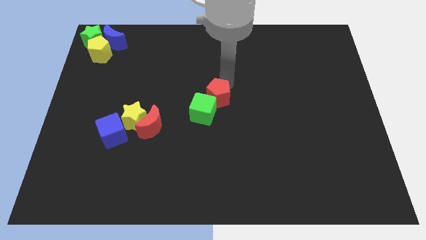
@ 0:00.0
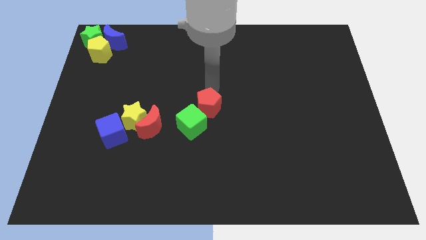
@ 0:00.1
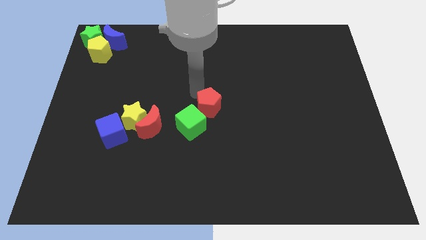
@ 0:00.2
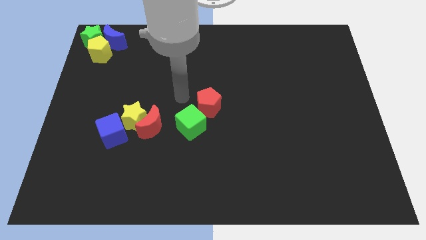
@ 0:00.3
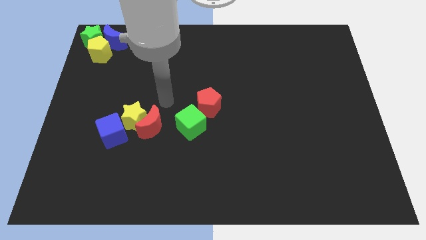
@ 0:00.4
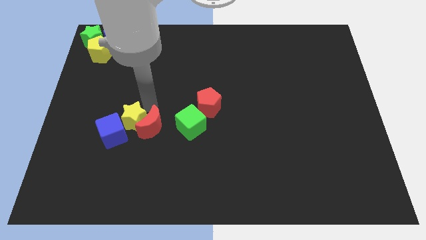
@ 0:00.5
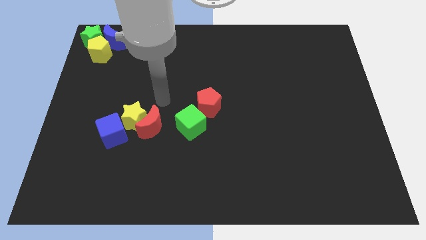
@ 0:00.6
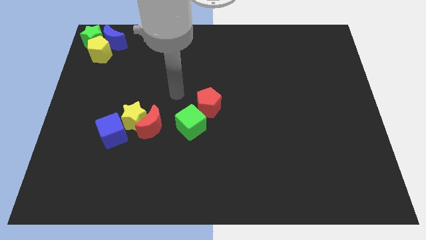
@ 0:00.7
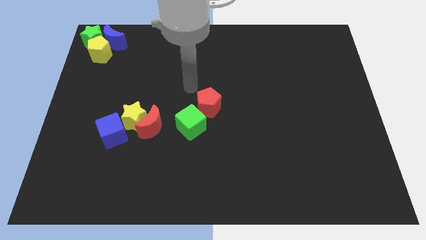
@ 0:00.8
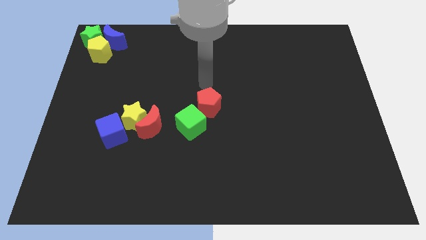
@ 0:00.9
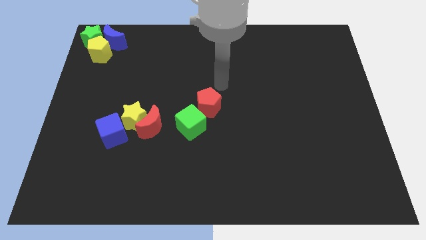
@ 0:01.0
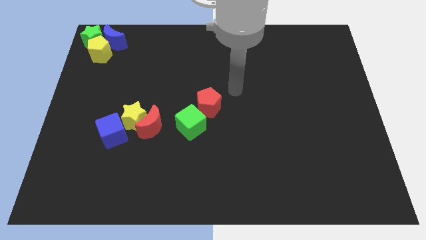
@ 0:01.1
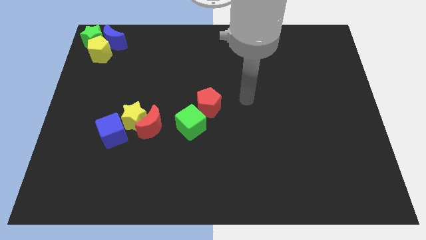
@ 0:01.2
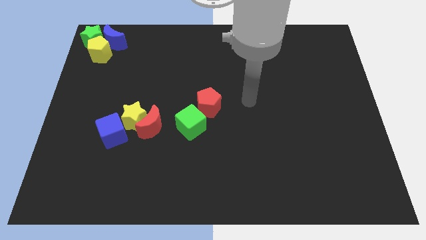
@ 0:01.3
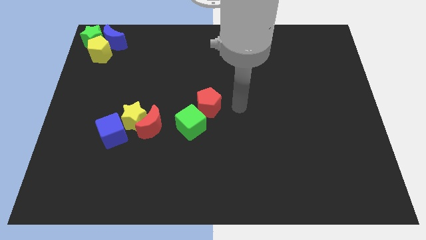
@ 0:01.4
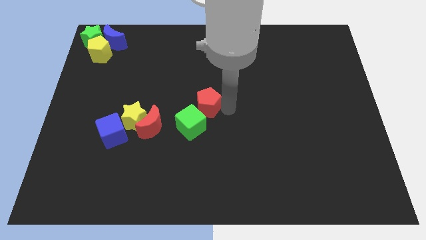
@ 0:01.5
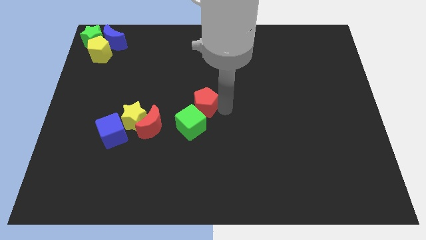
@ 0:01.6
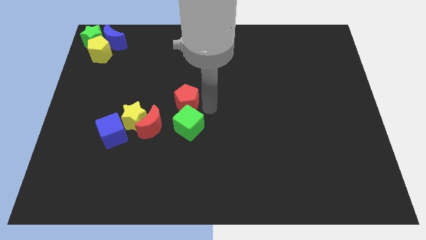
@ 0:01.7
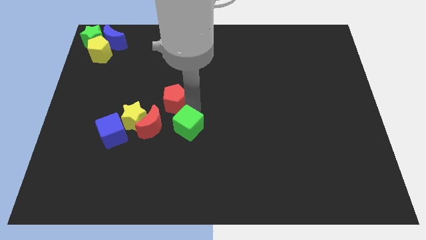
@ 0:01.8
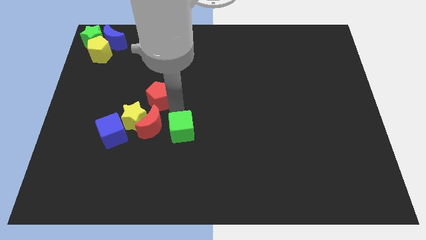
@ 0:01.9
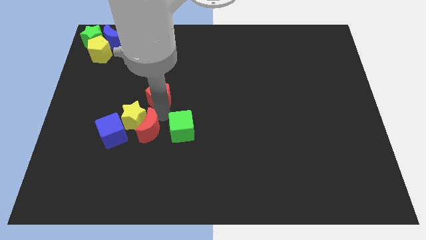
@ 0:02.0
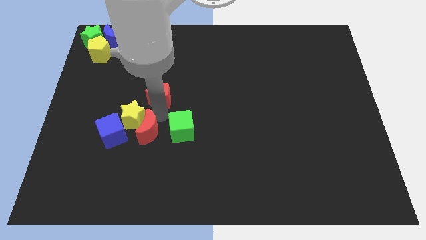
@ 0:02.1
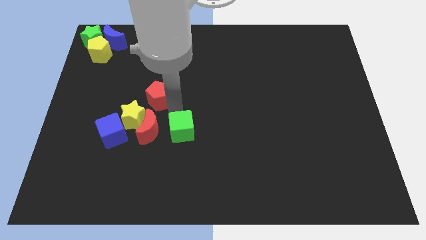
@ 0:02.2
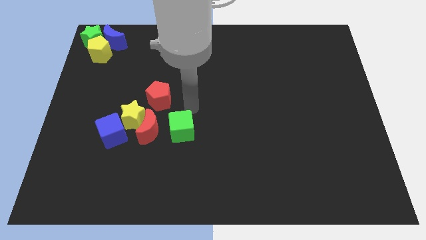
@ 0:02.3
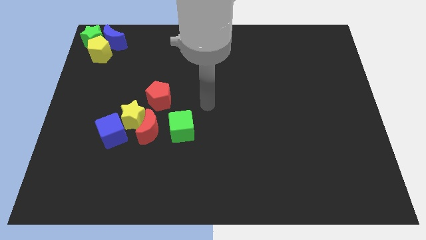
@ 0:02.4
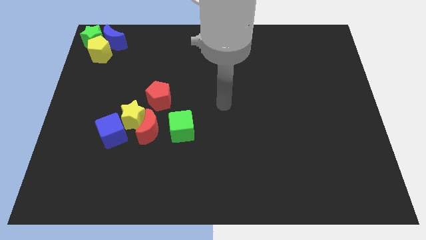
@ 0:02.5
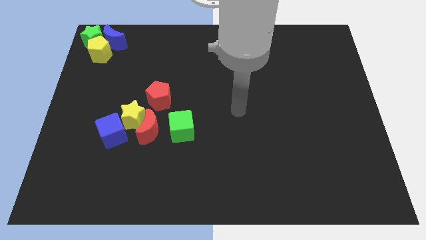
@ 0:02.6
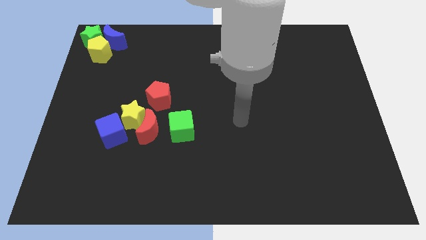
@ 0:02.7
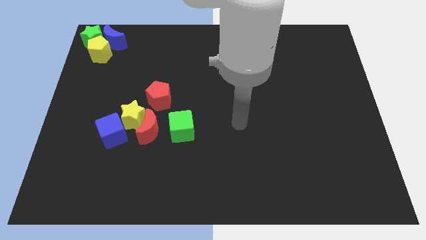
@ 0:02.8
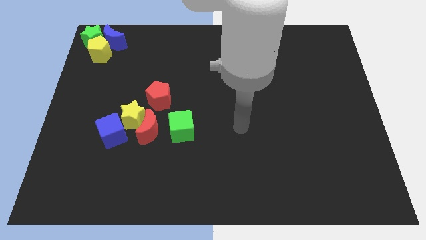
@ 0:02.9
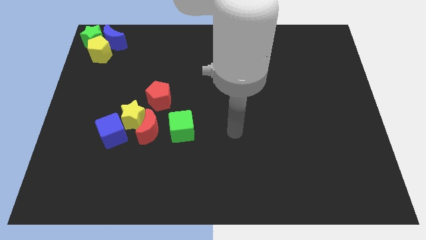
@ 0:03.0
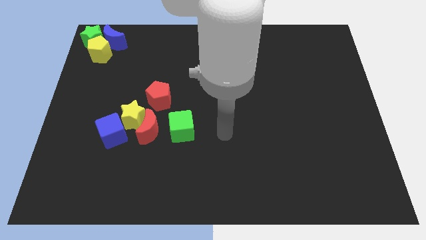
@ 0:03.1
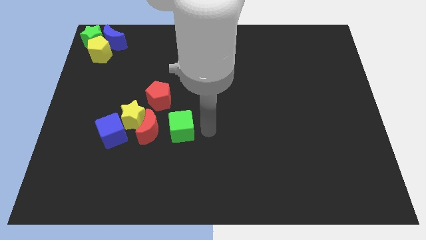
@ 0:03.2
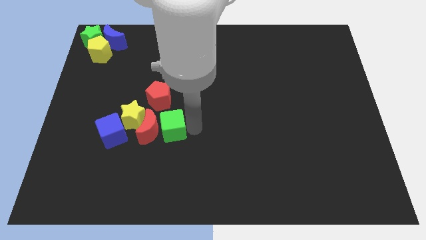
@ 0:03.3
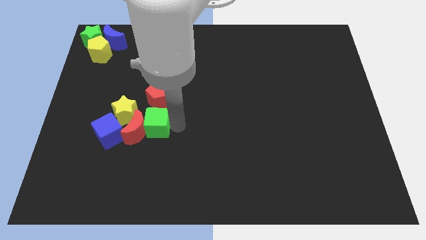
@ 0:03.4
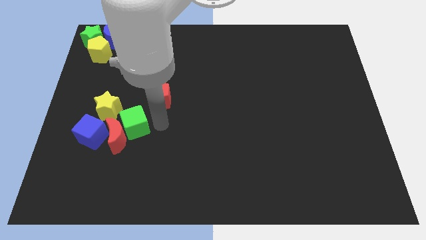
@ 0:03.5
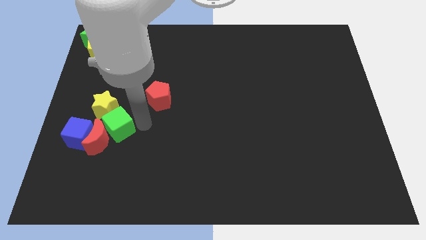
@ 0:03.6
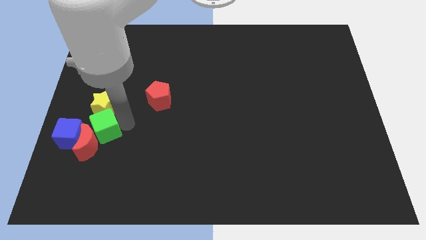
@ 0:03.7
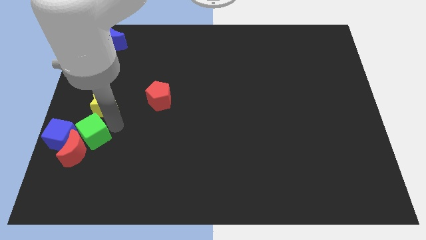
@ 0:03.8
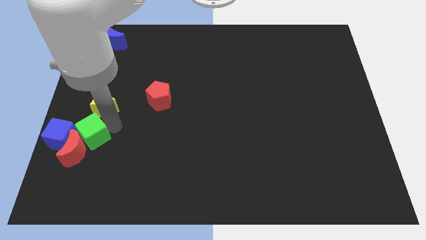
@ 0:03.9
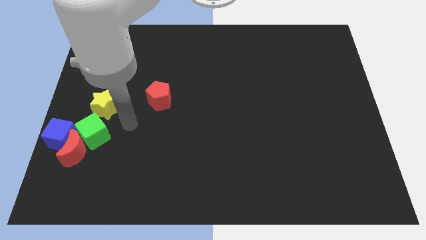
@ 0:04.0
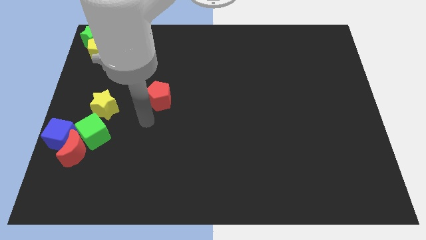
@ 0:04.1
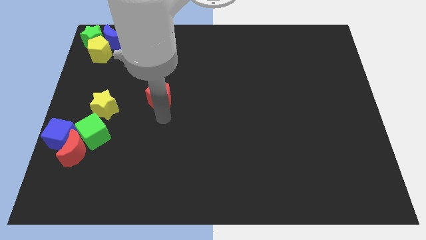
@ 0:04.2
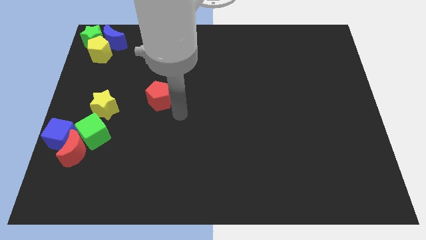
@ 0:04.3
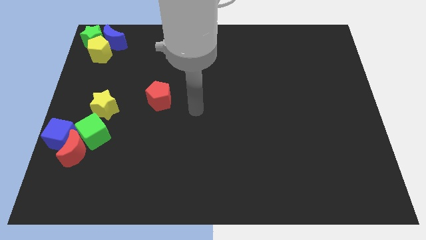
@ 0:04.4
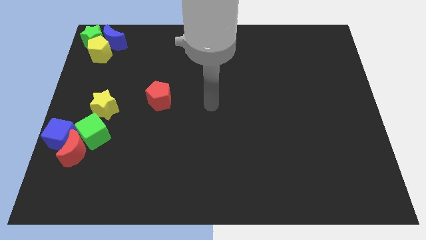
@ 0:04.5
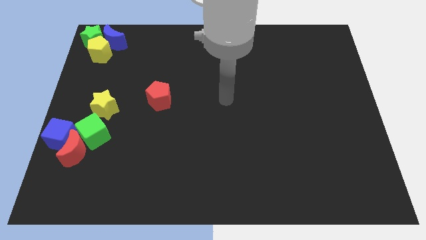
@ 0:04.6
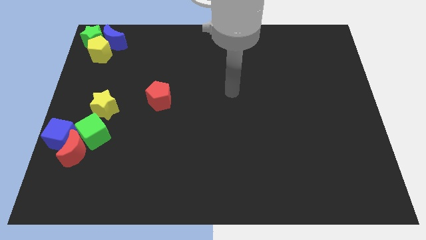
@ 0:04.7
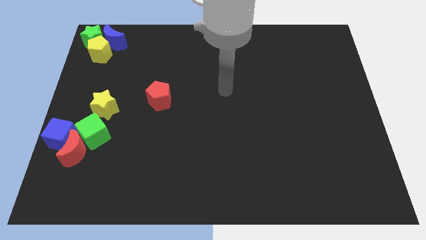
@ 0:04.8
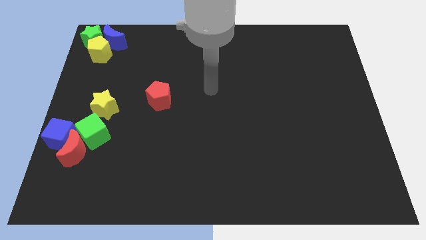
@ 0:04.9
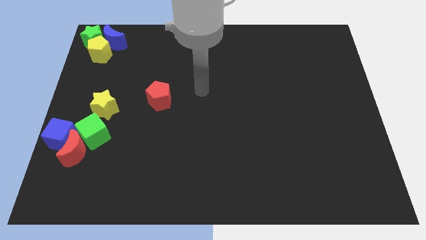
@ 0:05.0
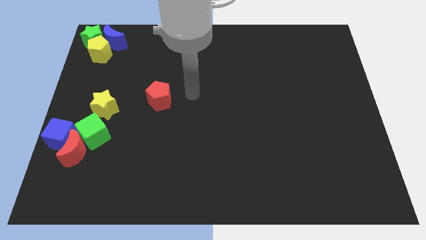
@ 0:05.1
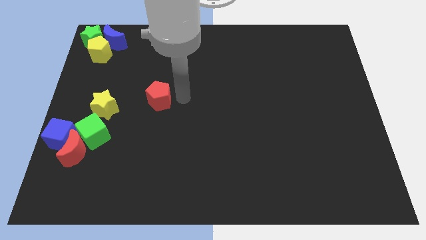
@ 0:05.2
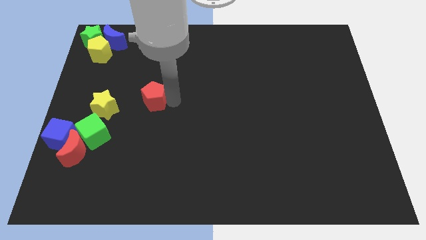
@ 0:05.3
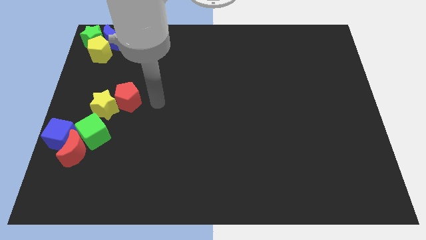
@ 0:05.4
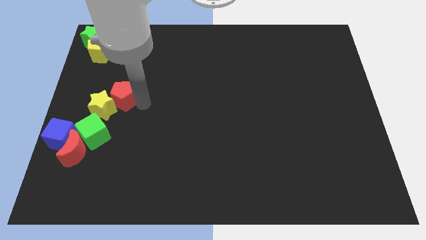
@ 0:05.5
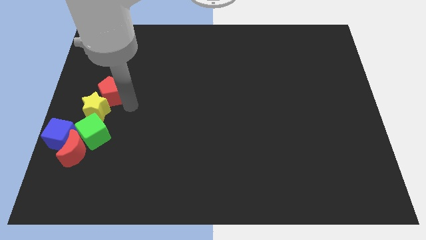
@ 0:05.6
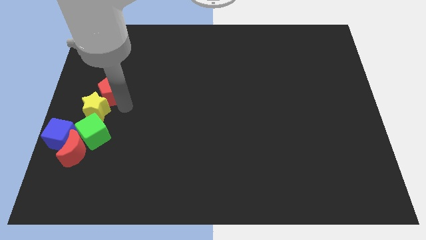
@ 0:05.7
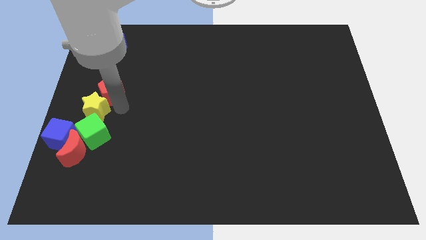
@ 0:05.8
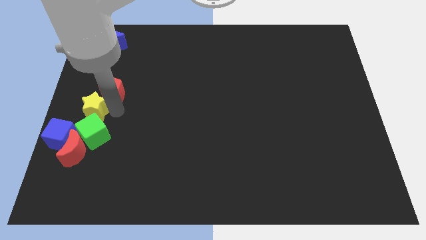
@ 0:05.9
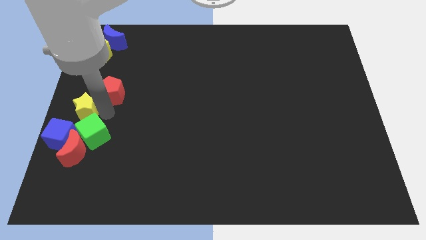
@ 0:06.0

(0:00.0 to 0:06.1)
push two red blocks along with the yellow star green cube and blue cube towards left center

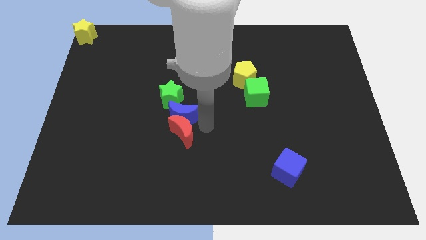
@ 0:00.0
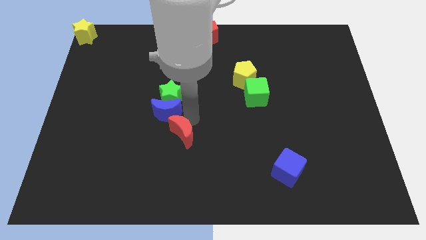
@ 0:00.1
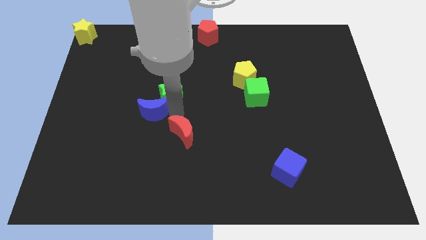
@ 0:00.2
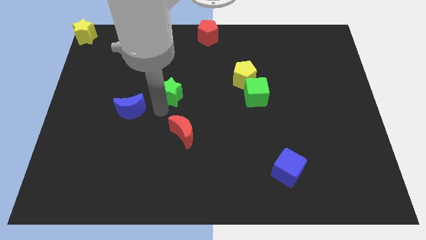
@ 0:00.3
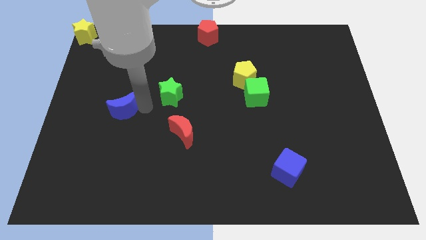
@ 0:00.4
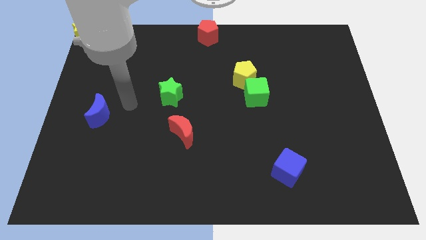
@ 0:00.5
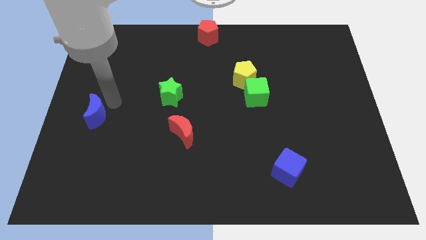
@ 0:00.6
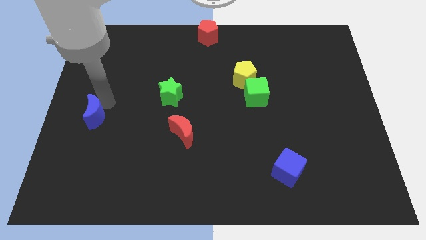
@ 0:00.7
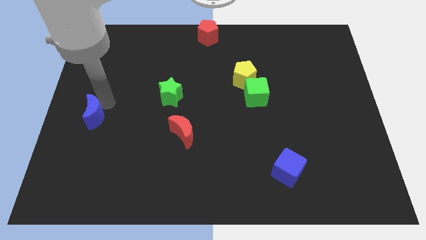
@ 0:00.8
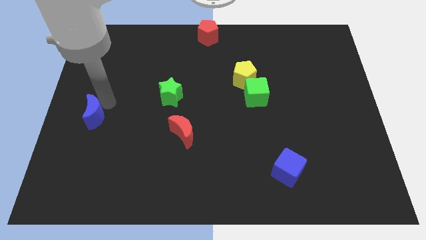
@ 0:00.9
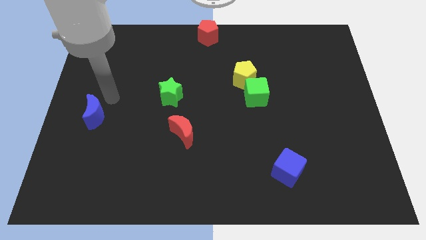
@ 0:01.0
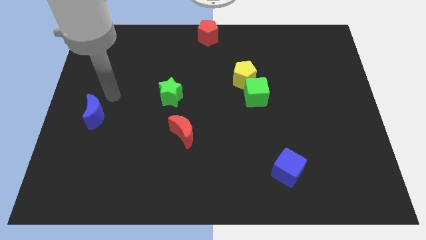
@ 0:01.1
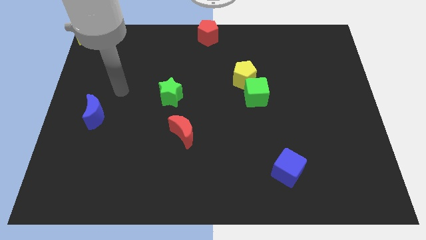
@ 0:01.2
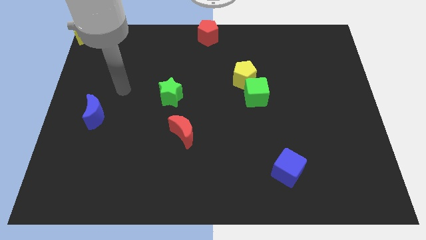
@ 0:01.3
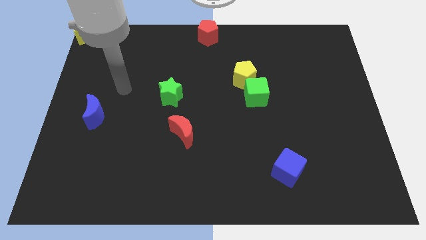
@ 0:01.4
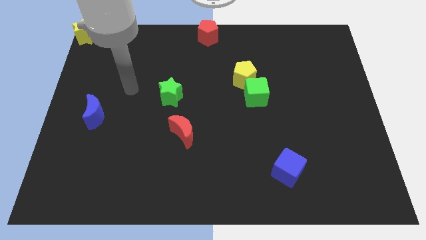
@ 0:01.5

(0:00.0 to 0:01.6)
push the blue moon towards the center left side of the board

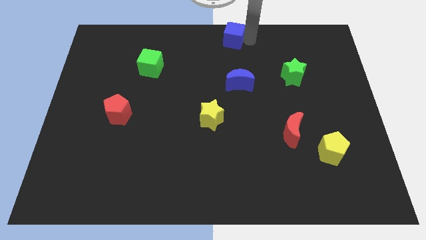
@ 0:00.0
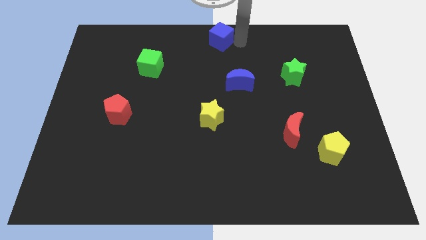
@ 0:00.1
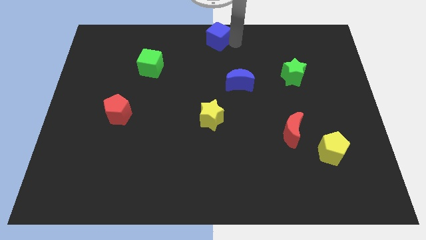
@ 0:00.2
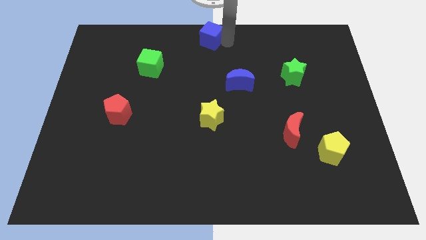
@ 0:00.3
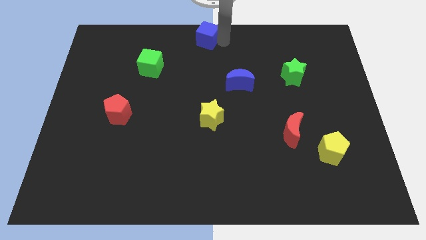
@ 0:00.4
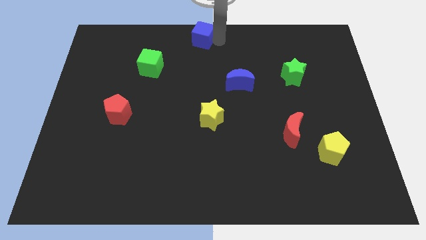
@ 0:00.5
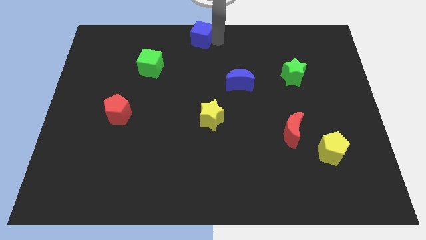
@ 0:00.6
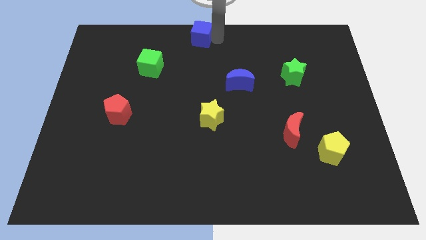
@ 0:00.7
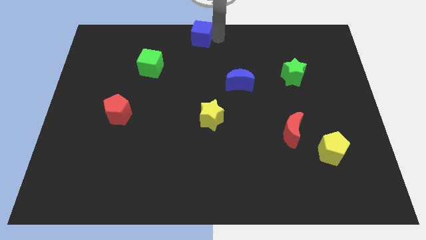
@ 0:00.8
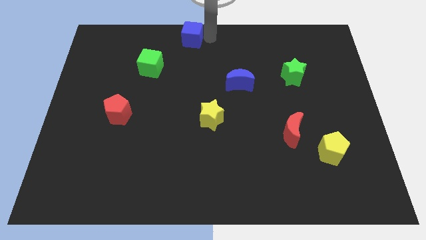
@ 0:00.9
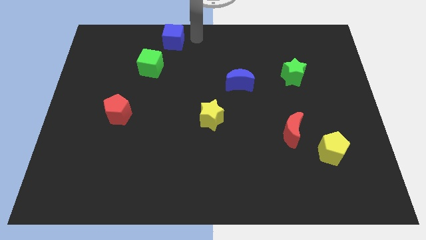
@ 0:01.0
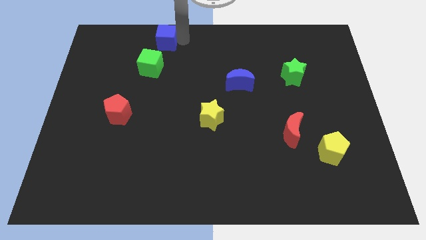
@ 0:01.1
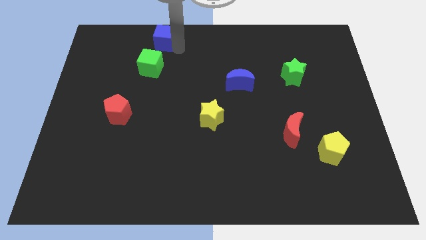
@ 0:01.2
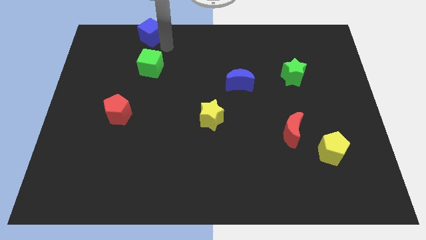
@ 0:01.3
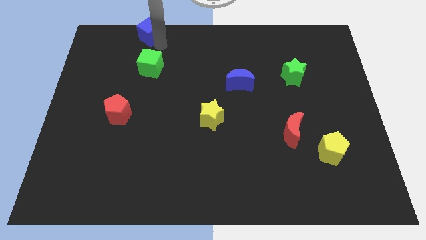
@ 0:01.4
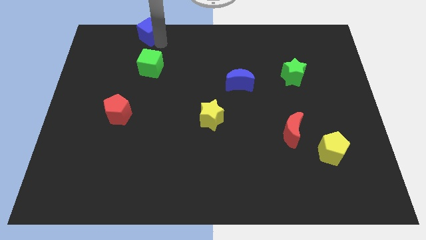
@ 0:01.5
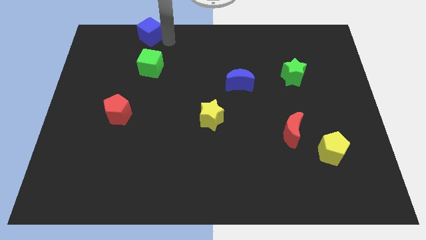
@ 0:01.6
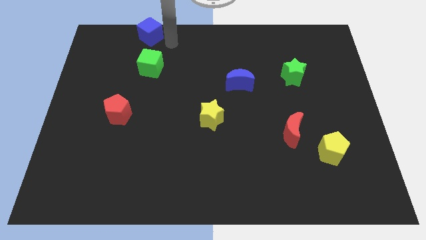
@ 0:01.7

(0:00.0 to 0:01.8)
place the blue cube vertically above the green cube
